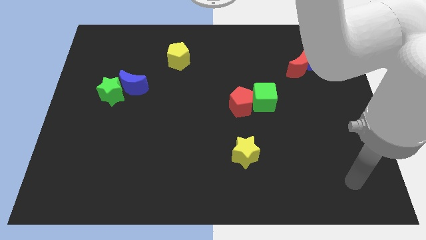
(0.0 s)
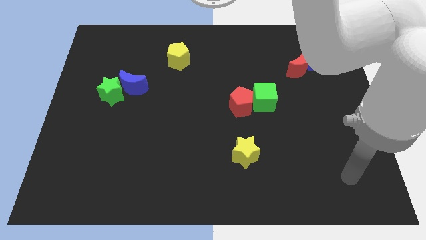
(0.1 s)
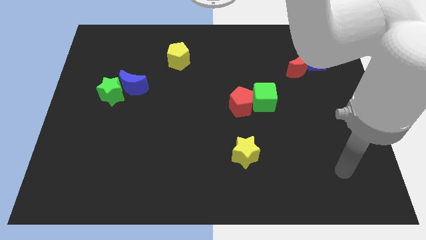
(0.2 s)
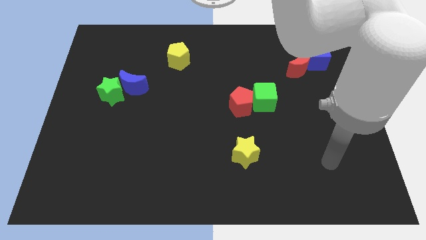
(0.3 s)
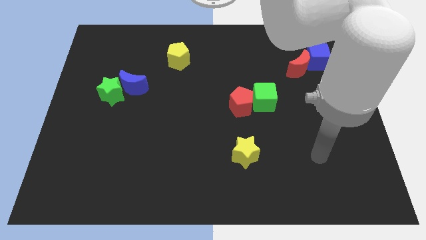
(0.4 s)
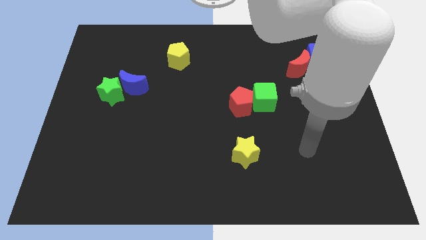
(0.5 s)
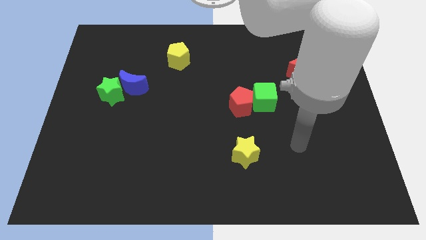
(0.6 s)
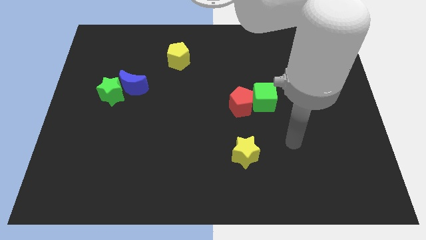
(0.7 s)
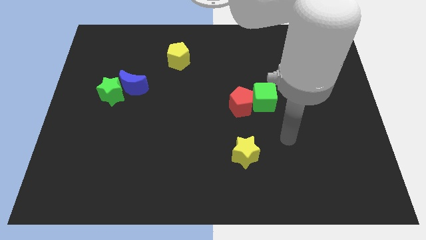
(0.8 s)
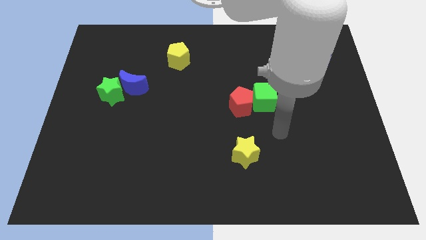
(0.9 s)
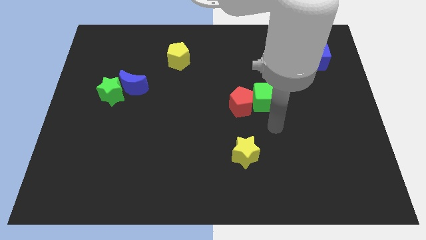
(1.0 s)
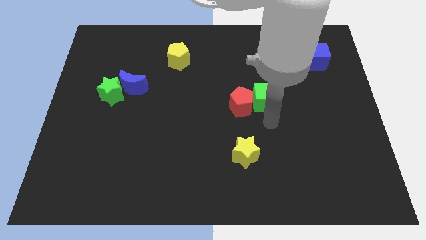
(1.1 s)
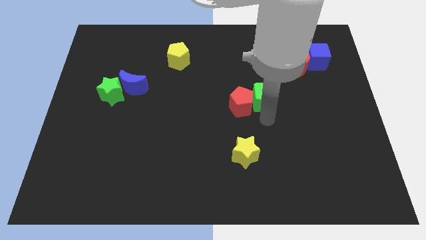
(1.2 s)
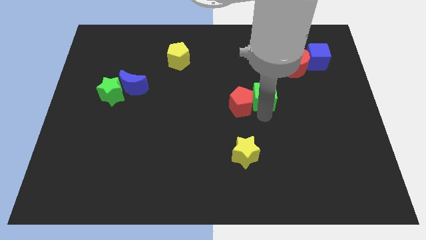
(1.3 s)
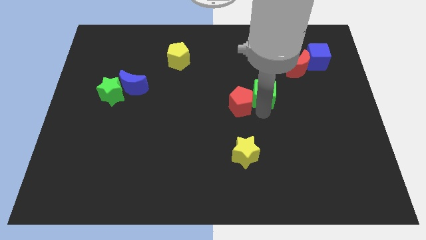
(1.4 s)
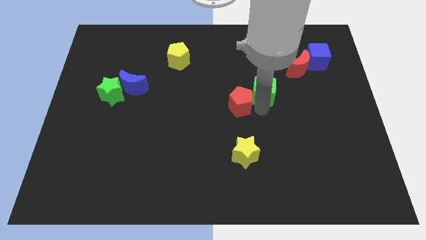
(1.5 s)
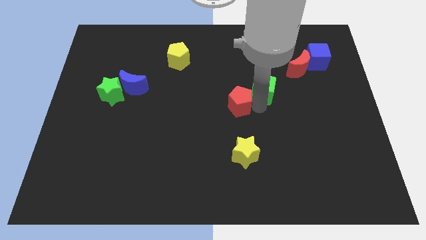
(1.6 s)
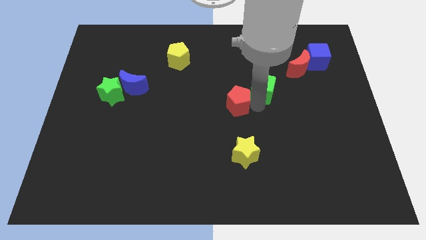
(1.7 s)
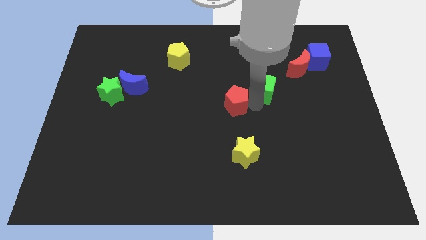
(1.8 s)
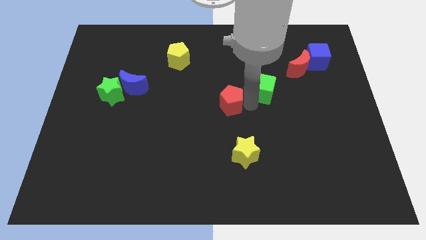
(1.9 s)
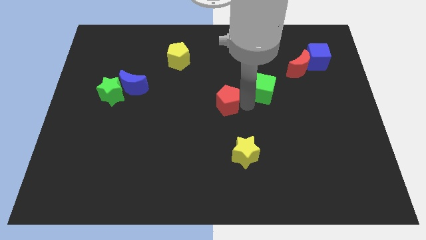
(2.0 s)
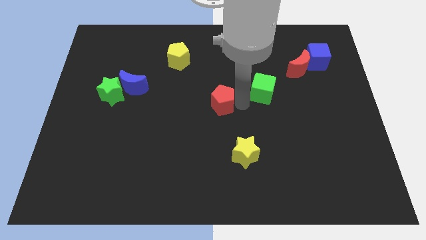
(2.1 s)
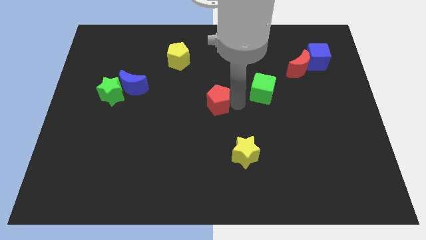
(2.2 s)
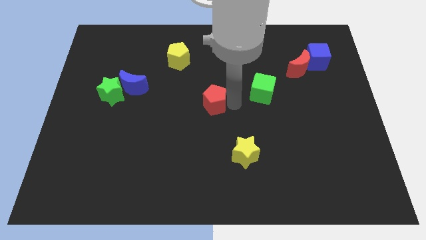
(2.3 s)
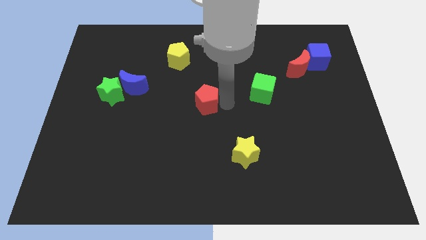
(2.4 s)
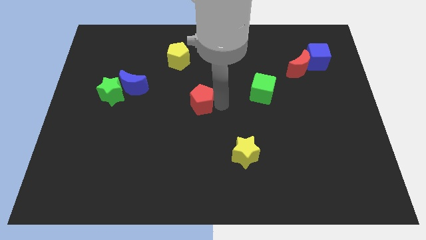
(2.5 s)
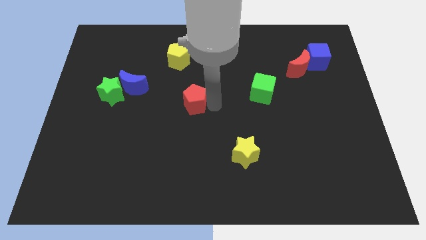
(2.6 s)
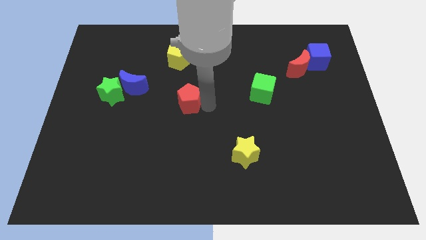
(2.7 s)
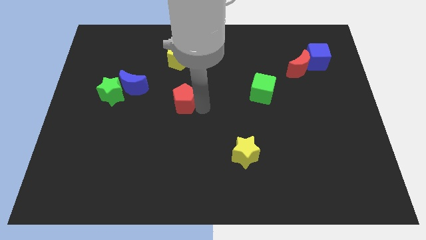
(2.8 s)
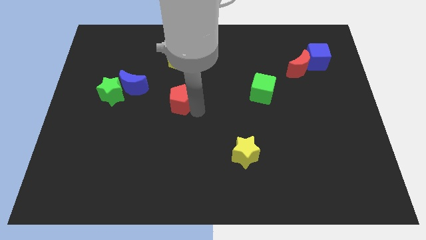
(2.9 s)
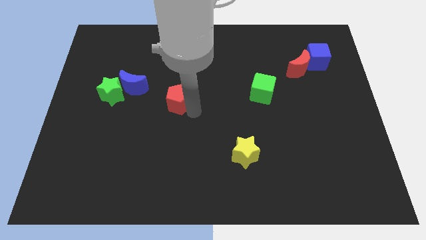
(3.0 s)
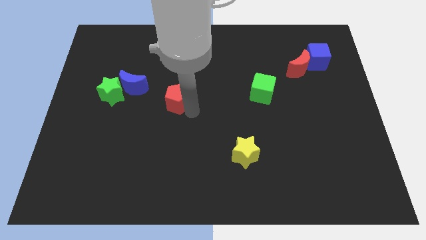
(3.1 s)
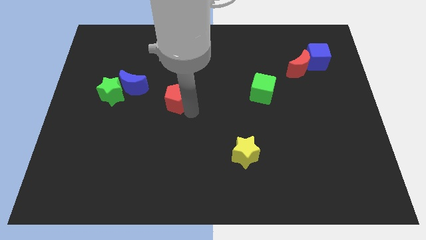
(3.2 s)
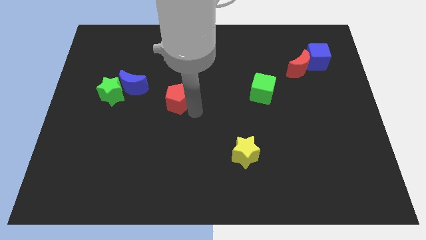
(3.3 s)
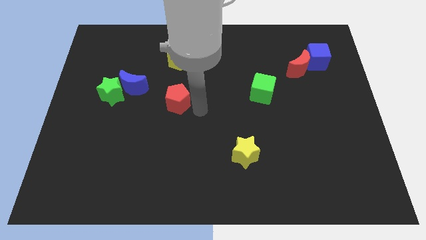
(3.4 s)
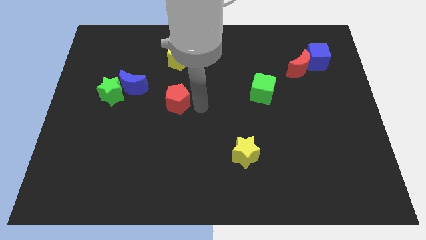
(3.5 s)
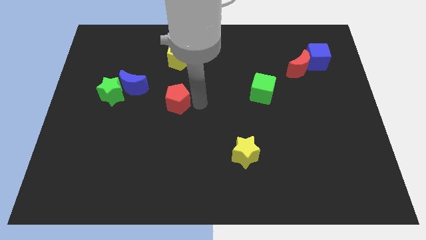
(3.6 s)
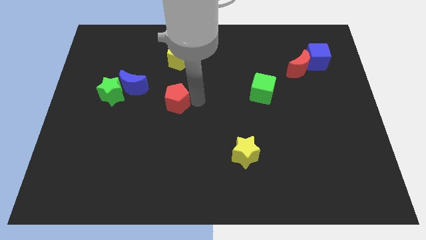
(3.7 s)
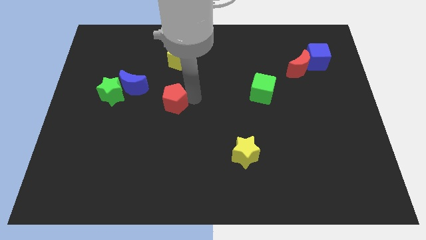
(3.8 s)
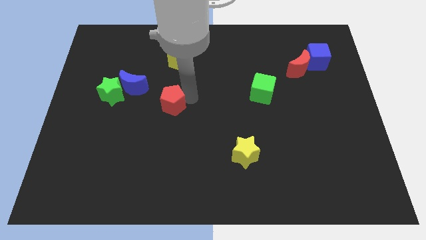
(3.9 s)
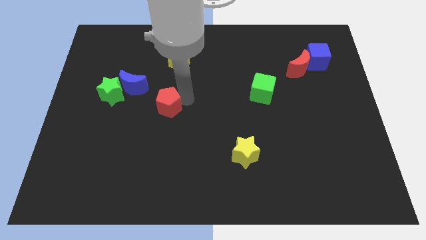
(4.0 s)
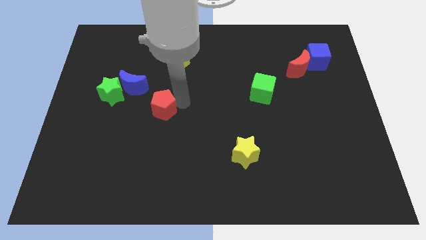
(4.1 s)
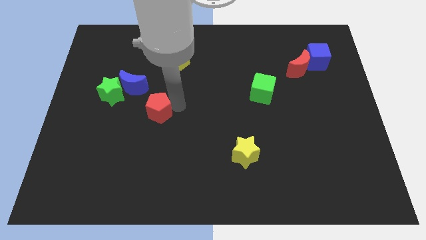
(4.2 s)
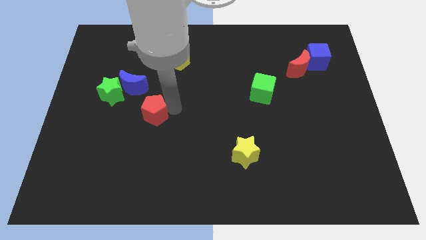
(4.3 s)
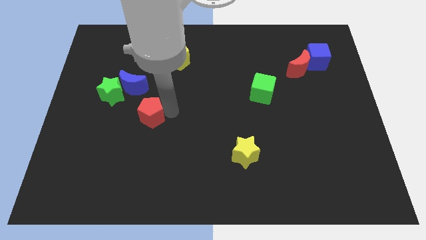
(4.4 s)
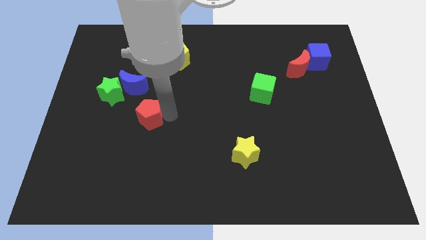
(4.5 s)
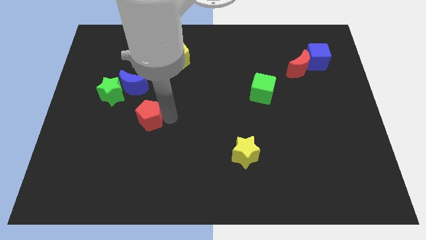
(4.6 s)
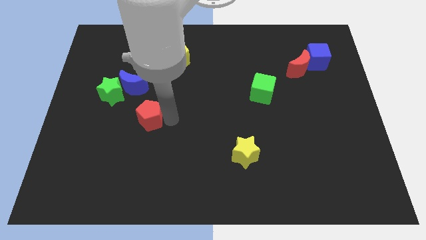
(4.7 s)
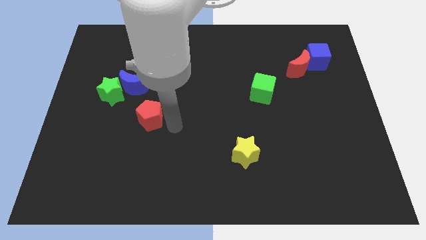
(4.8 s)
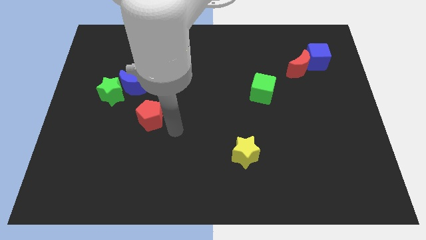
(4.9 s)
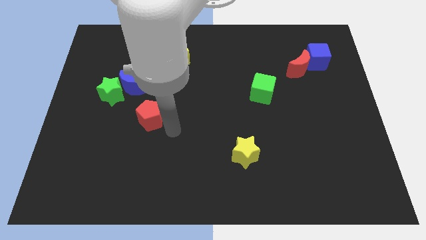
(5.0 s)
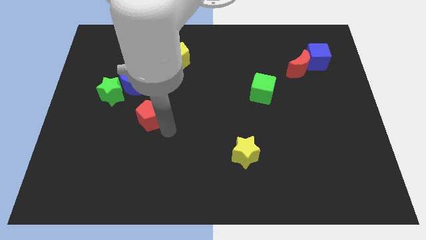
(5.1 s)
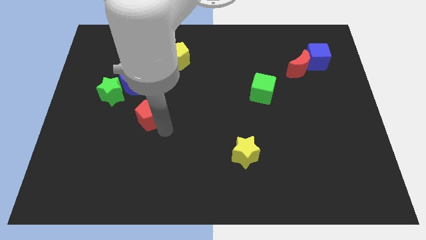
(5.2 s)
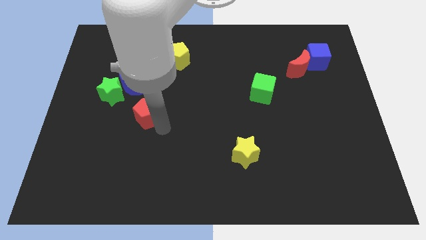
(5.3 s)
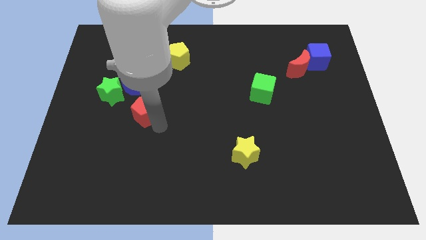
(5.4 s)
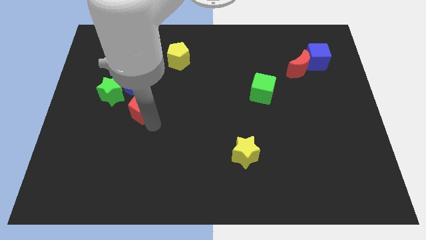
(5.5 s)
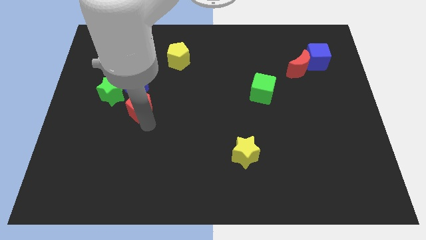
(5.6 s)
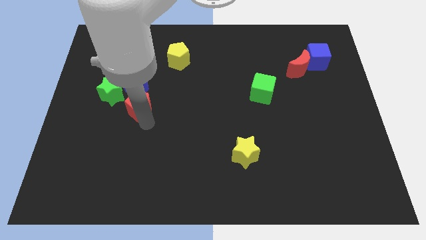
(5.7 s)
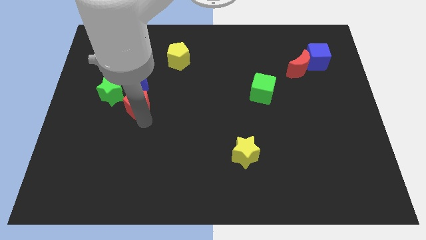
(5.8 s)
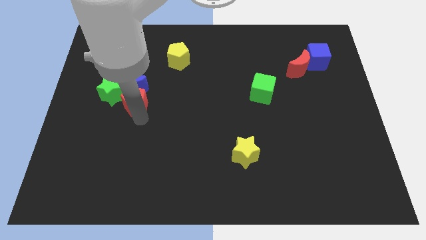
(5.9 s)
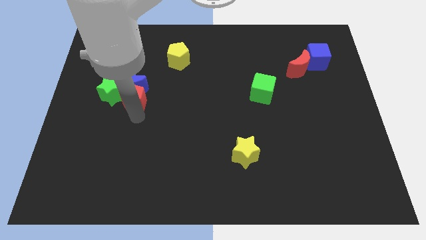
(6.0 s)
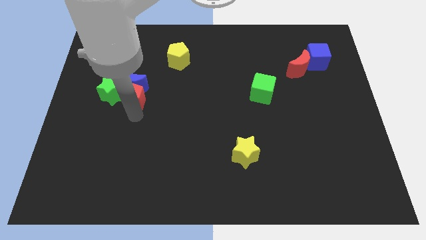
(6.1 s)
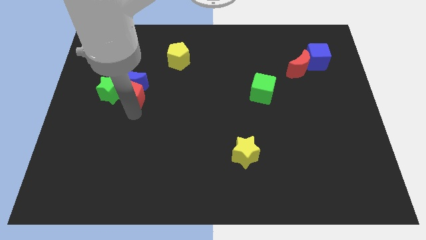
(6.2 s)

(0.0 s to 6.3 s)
move the red pentagon to the green star

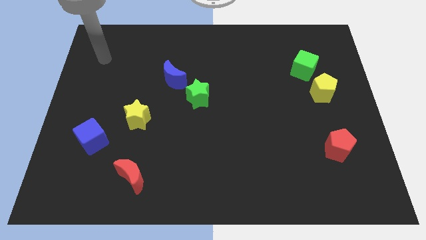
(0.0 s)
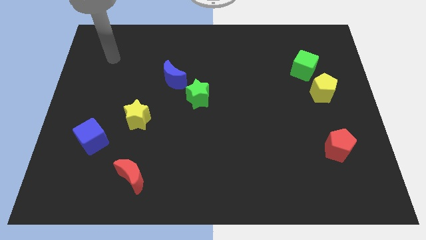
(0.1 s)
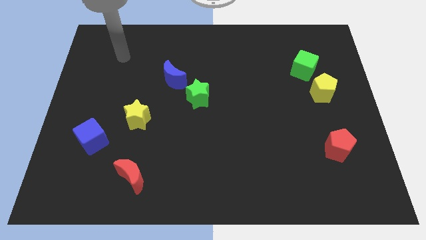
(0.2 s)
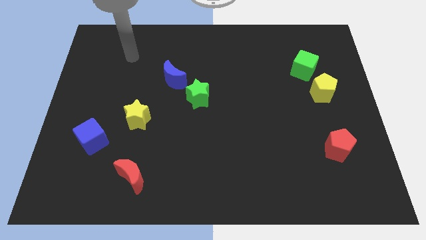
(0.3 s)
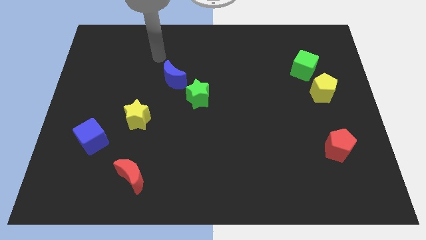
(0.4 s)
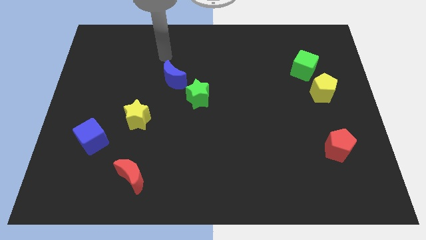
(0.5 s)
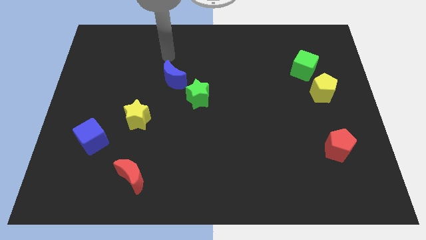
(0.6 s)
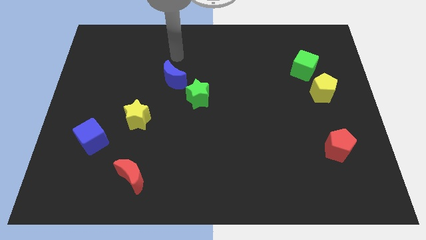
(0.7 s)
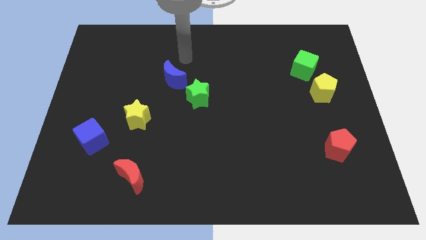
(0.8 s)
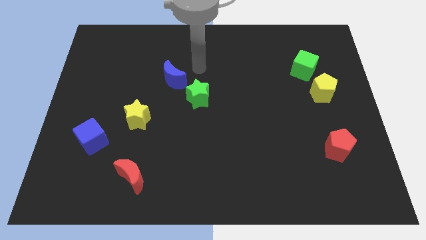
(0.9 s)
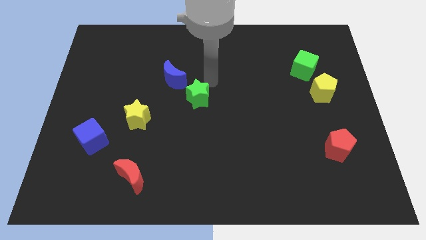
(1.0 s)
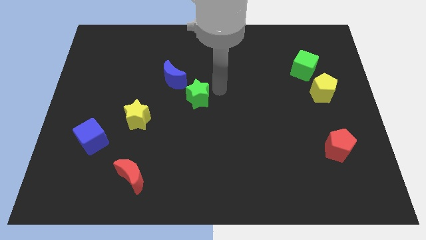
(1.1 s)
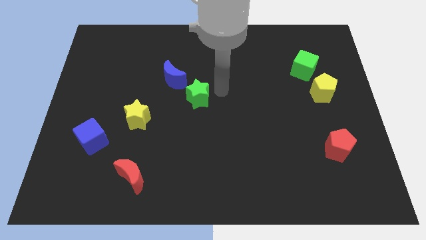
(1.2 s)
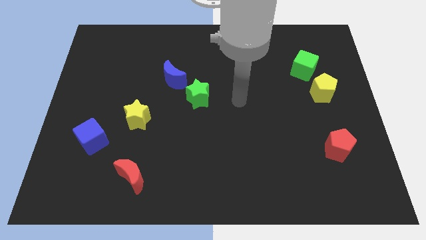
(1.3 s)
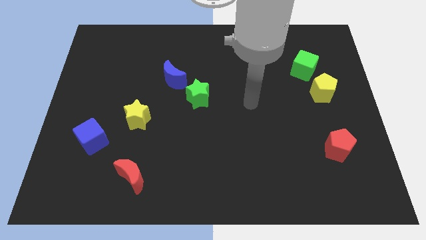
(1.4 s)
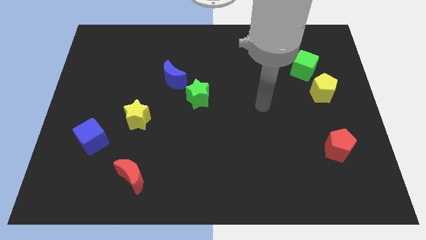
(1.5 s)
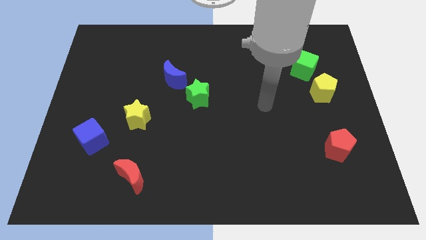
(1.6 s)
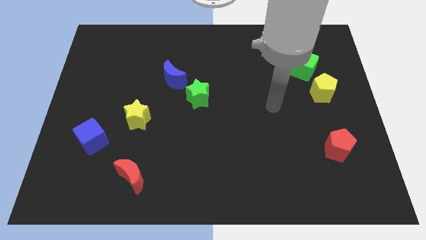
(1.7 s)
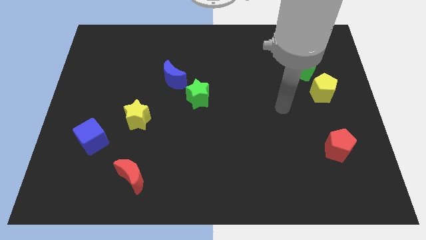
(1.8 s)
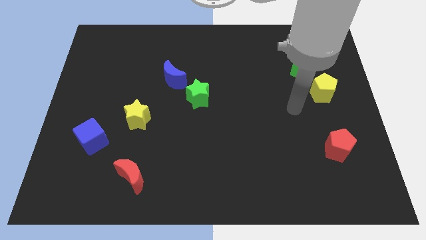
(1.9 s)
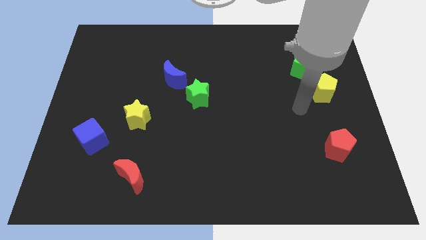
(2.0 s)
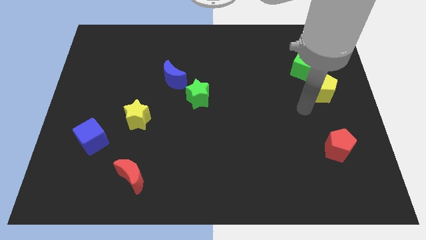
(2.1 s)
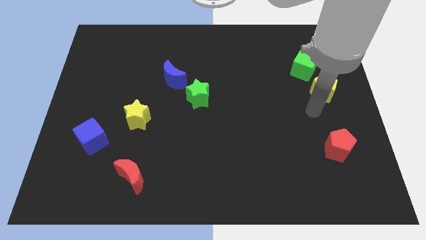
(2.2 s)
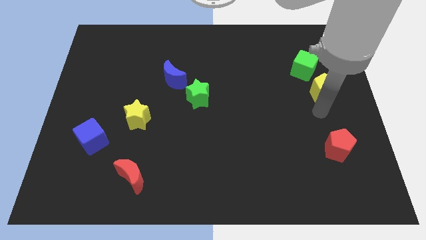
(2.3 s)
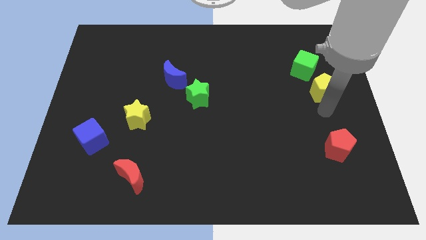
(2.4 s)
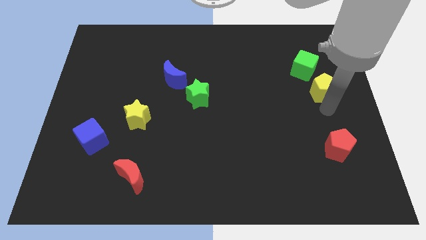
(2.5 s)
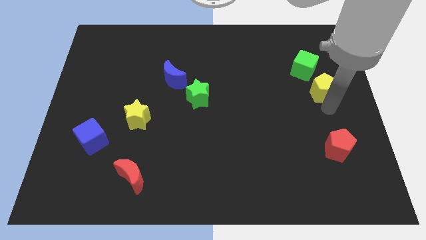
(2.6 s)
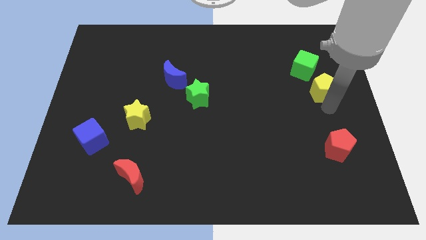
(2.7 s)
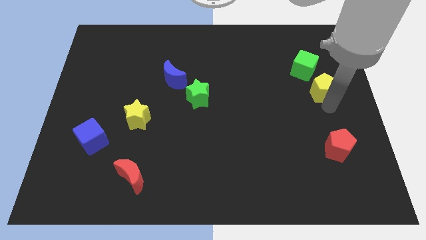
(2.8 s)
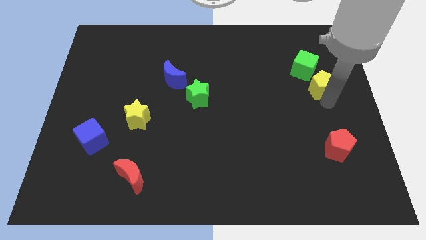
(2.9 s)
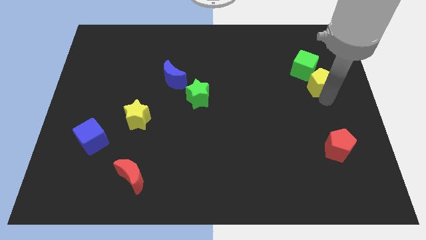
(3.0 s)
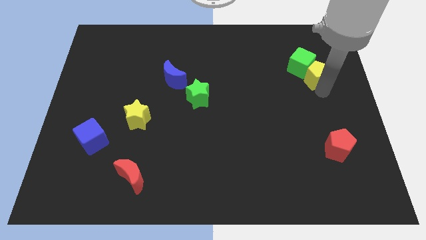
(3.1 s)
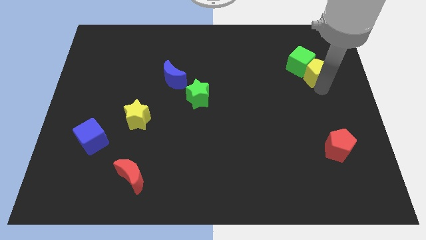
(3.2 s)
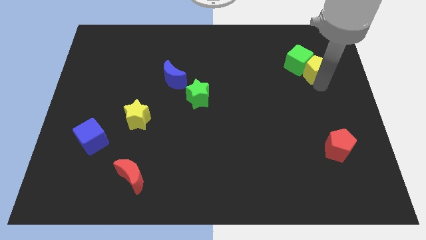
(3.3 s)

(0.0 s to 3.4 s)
move the yellow pentagon next to the green cube
